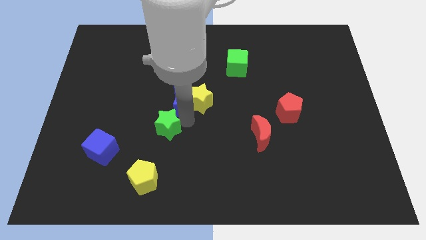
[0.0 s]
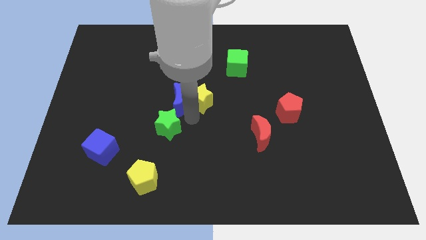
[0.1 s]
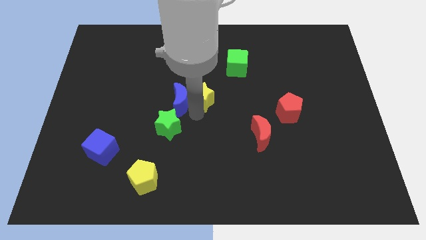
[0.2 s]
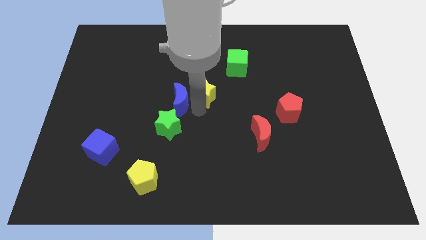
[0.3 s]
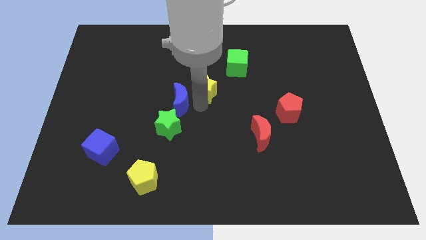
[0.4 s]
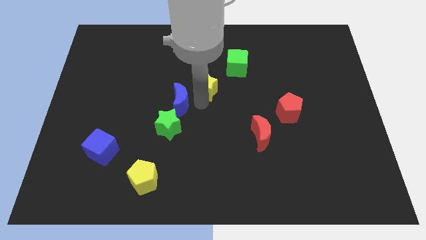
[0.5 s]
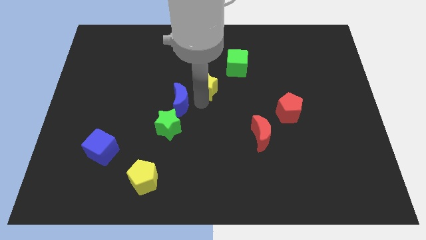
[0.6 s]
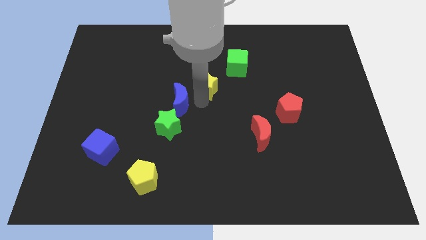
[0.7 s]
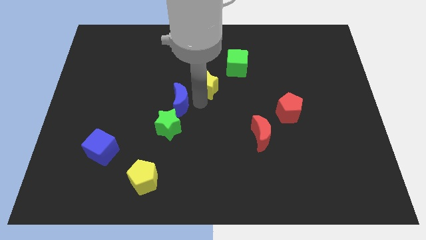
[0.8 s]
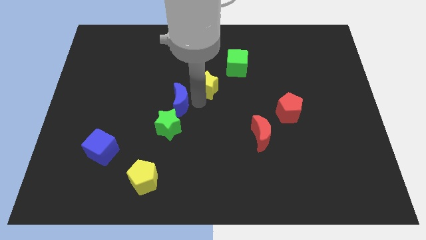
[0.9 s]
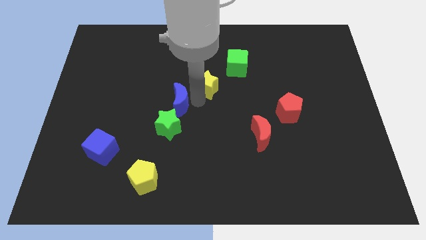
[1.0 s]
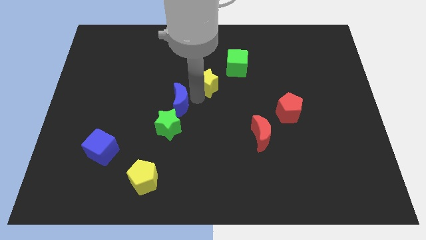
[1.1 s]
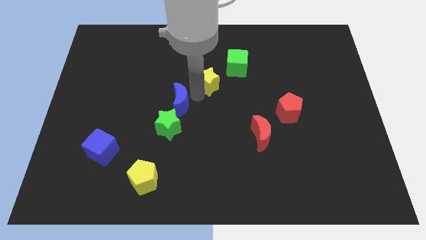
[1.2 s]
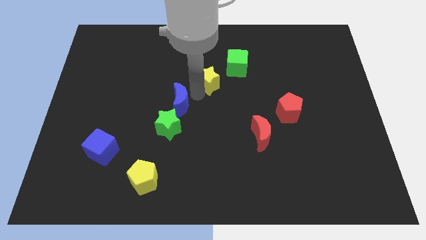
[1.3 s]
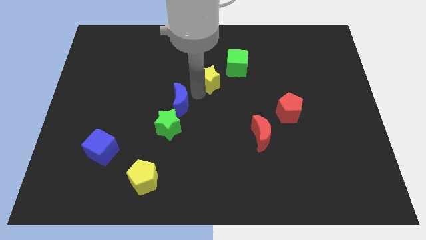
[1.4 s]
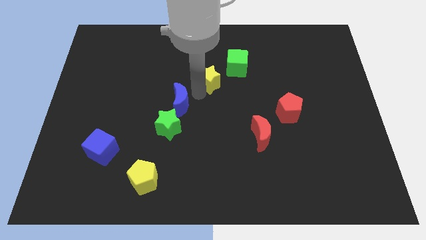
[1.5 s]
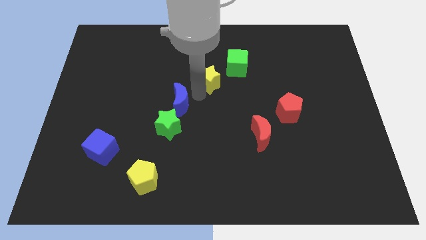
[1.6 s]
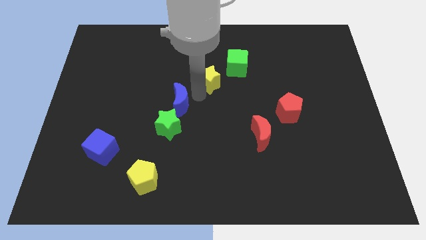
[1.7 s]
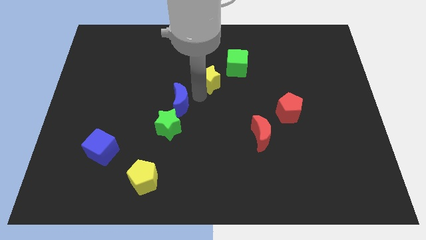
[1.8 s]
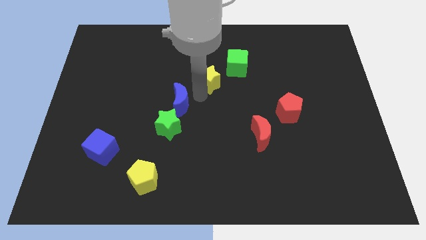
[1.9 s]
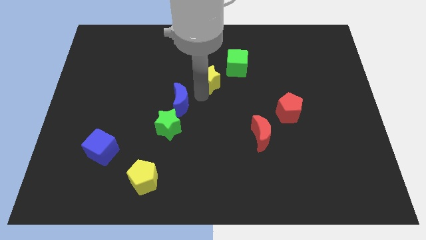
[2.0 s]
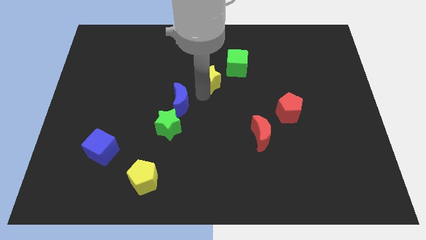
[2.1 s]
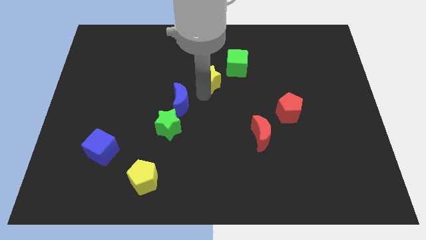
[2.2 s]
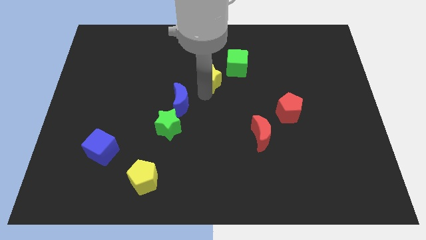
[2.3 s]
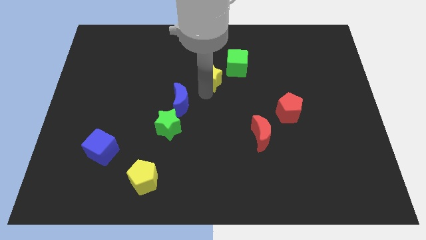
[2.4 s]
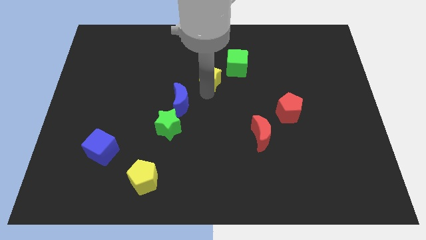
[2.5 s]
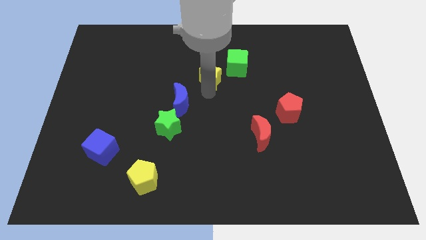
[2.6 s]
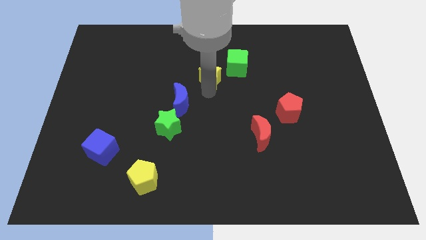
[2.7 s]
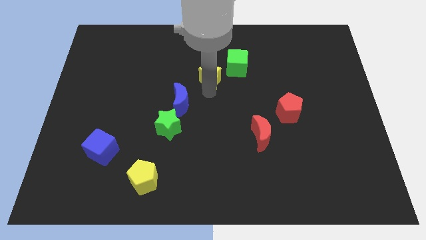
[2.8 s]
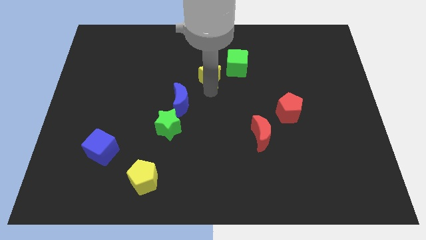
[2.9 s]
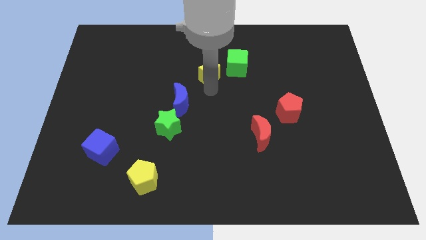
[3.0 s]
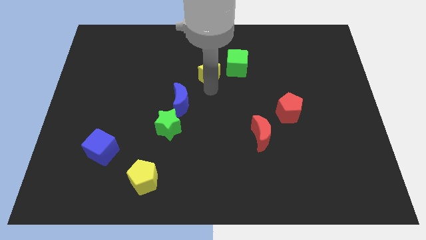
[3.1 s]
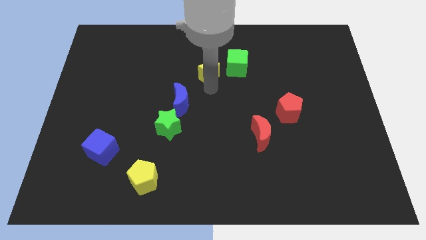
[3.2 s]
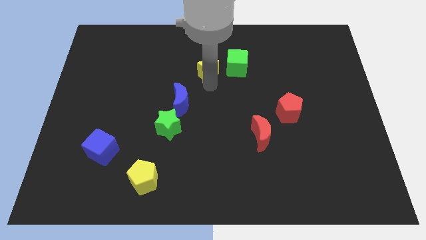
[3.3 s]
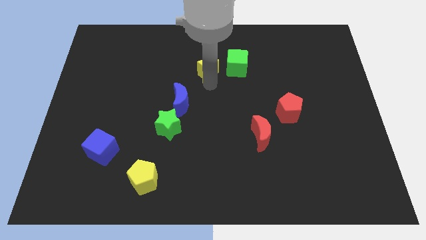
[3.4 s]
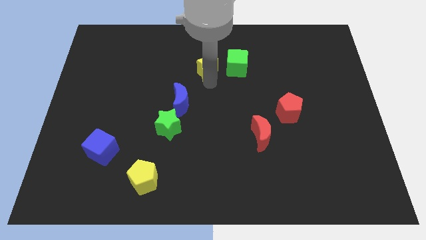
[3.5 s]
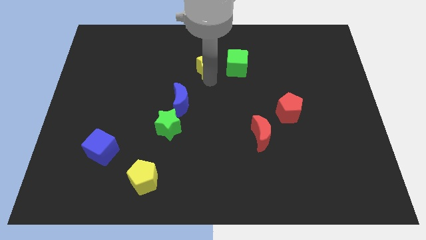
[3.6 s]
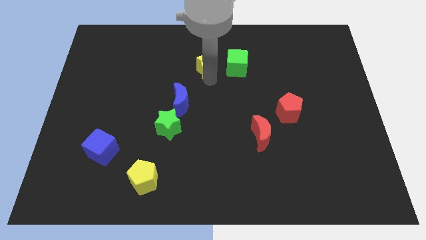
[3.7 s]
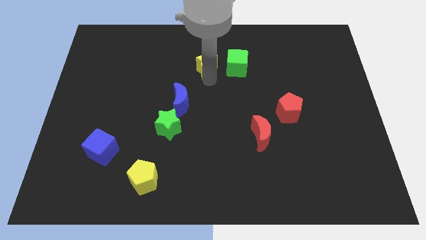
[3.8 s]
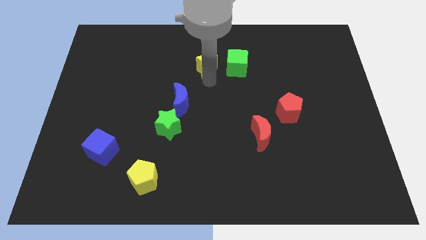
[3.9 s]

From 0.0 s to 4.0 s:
move the yellow star to the left of the green cube

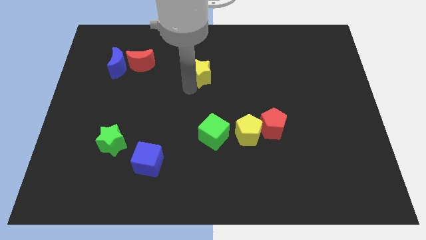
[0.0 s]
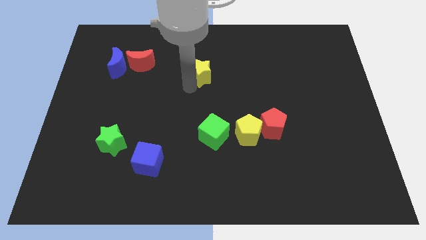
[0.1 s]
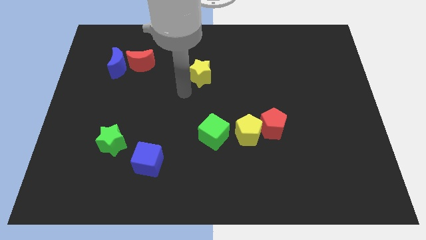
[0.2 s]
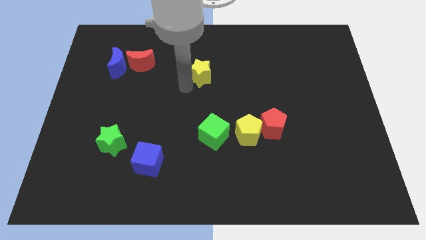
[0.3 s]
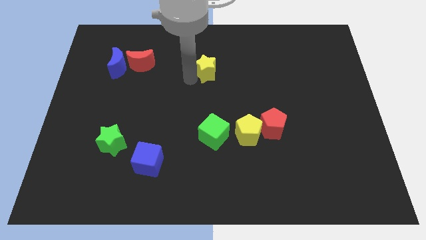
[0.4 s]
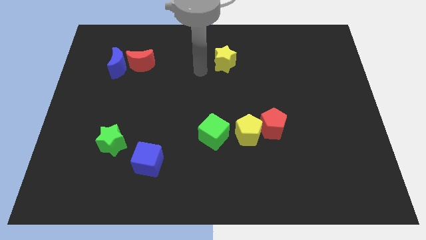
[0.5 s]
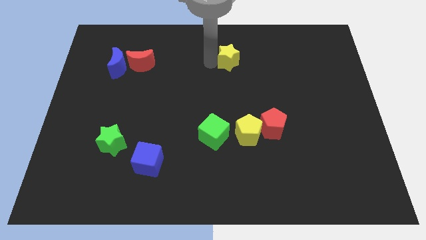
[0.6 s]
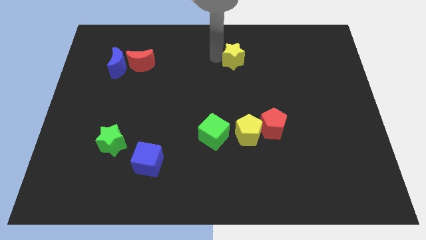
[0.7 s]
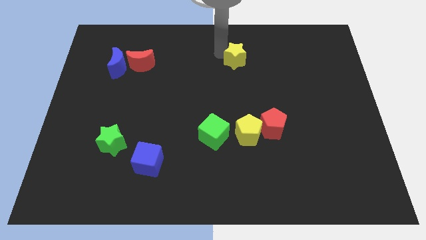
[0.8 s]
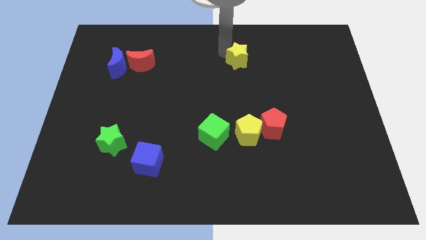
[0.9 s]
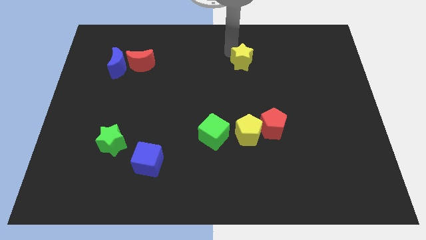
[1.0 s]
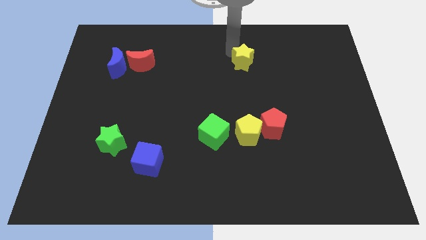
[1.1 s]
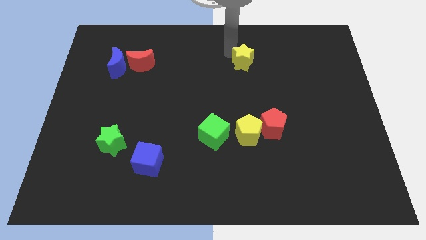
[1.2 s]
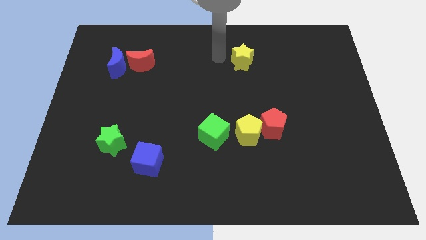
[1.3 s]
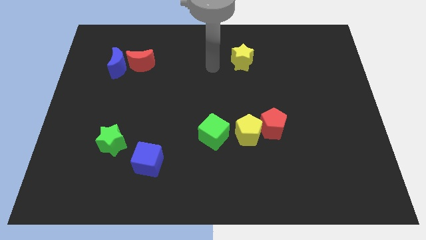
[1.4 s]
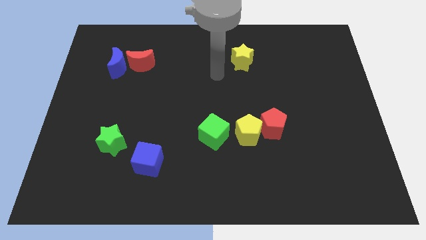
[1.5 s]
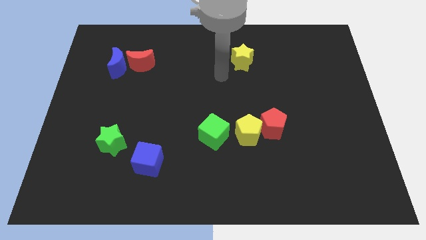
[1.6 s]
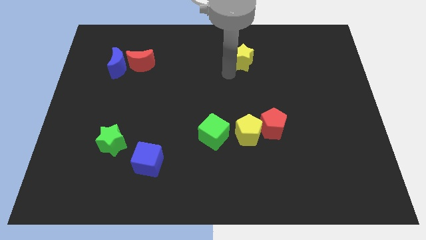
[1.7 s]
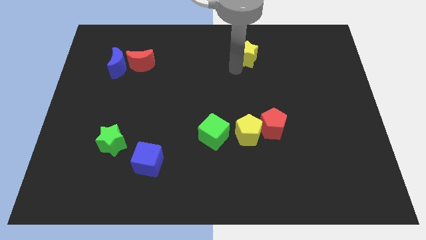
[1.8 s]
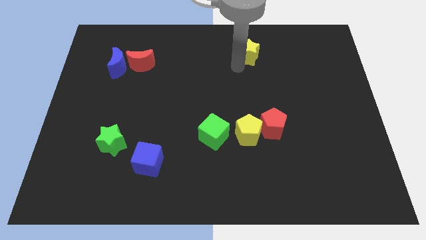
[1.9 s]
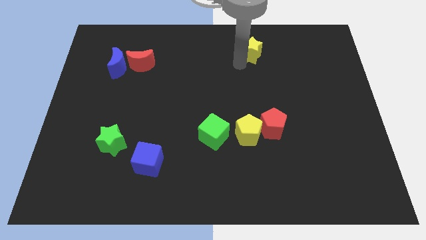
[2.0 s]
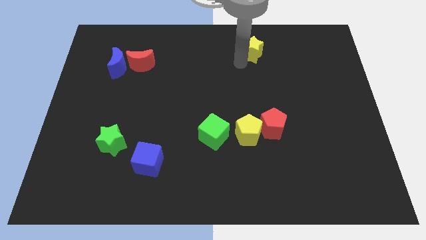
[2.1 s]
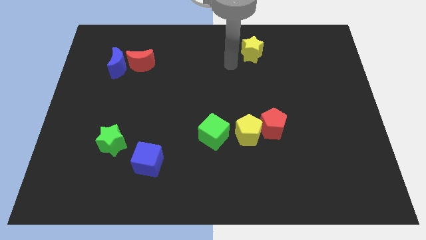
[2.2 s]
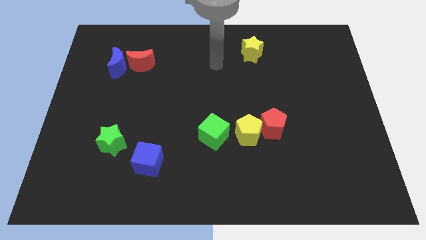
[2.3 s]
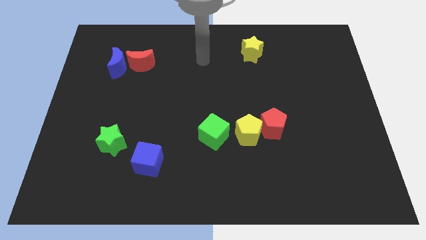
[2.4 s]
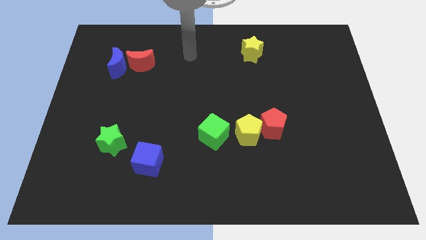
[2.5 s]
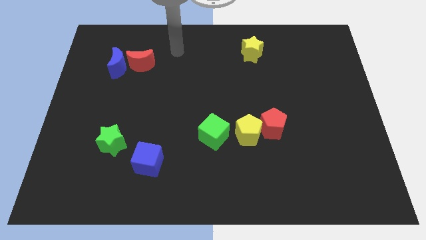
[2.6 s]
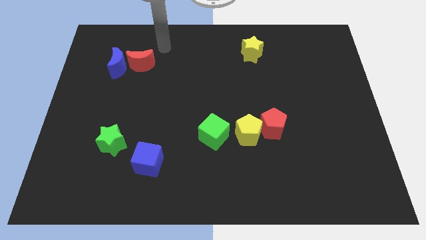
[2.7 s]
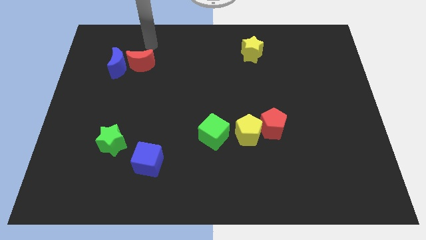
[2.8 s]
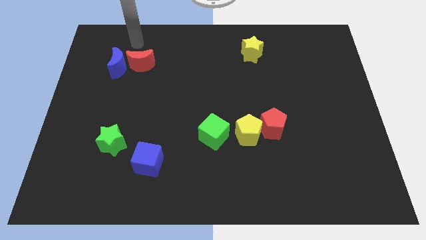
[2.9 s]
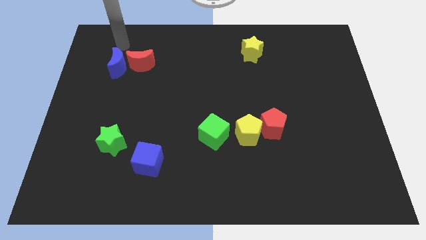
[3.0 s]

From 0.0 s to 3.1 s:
move the yellow star above the yellow pentagon

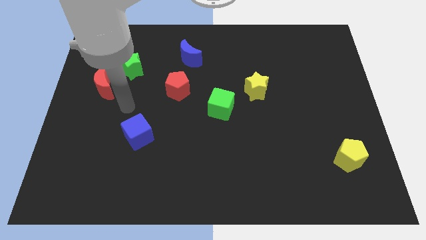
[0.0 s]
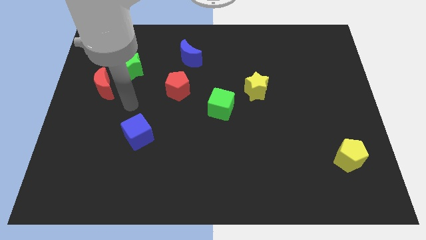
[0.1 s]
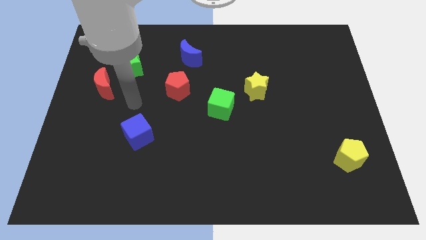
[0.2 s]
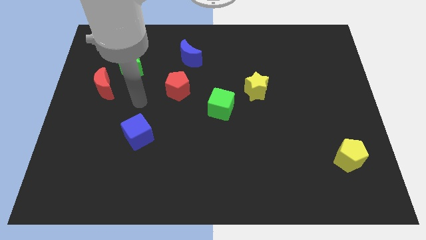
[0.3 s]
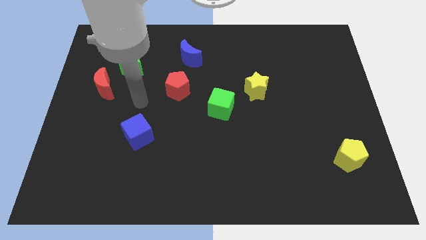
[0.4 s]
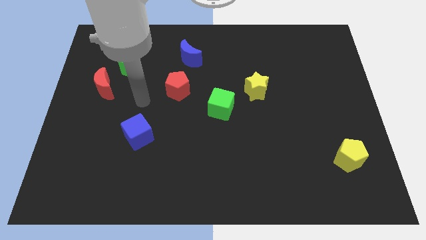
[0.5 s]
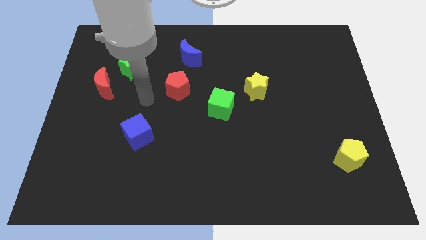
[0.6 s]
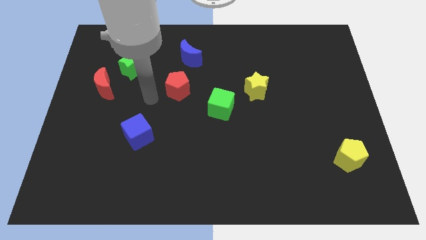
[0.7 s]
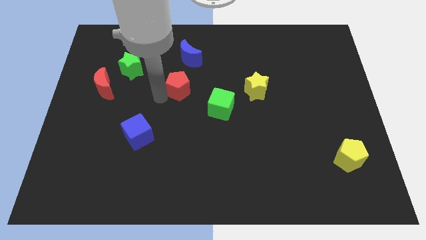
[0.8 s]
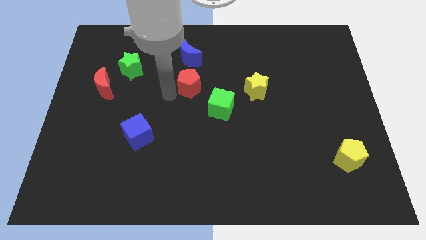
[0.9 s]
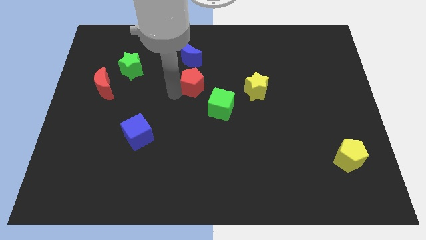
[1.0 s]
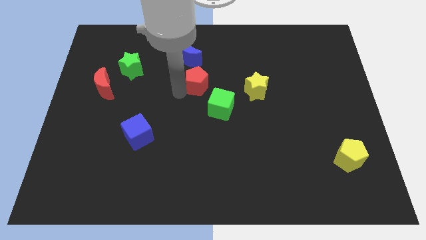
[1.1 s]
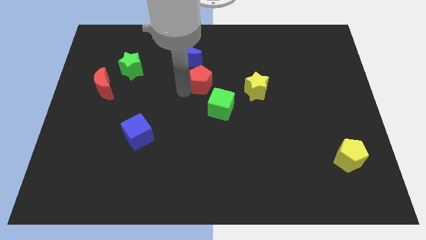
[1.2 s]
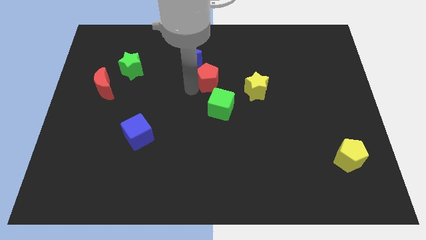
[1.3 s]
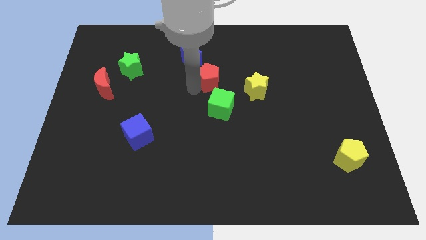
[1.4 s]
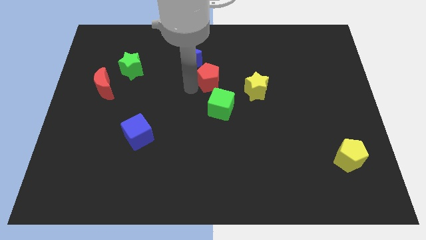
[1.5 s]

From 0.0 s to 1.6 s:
move the red pentagon diagonal to the blue moon

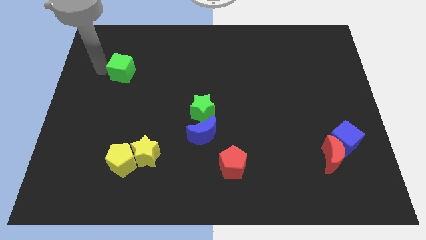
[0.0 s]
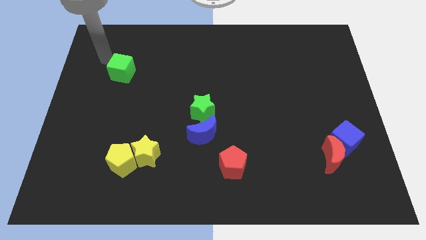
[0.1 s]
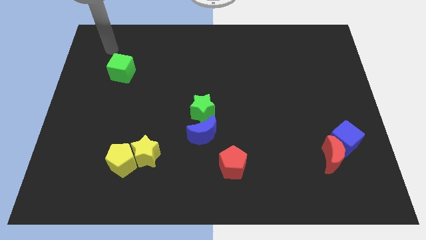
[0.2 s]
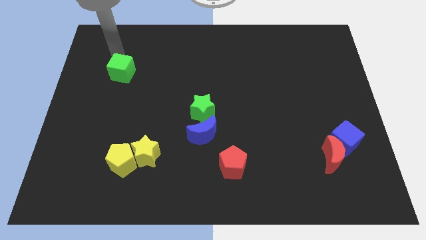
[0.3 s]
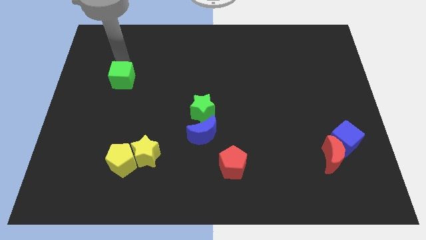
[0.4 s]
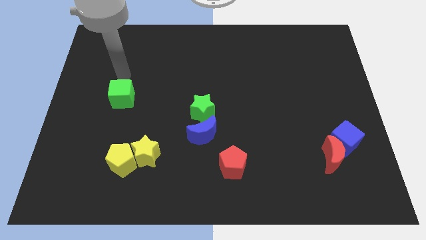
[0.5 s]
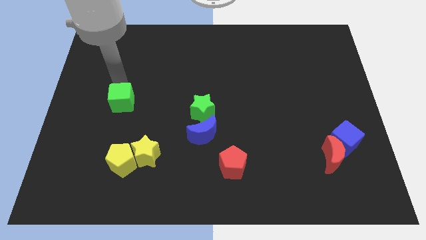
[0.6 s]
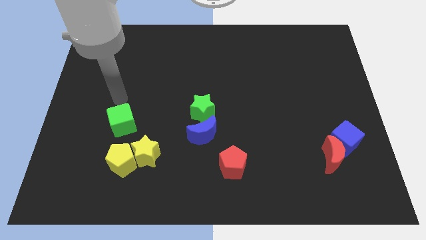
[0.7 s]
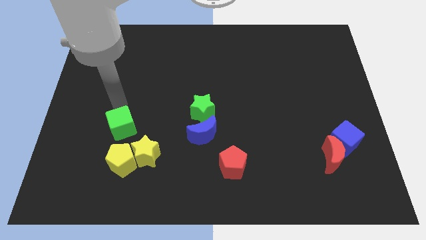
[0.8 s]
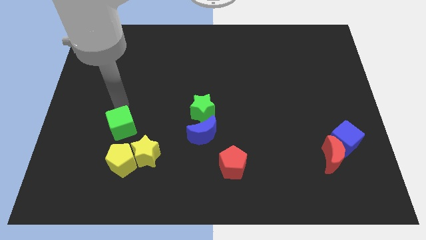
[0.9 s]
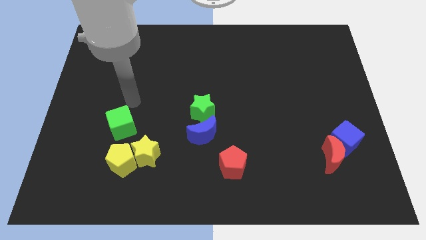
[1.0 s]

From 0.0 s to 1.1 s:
move green cube diagonally above the yellow star
